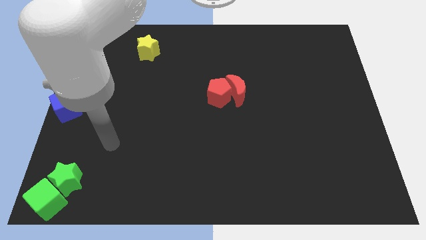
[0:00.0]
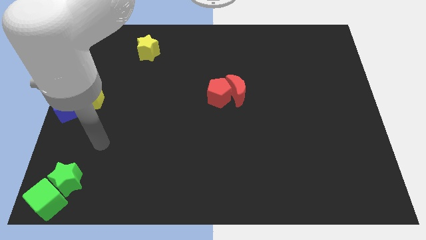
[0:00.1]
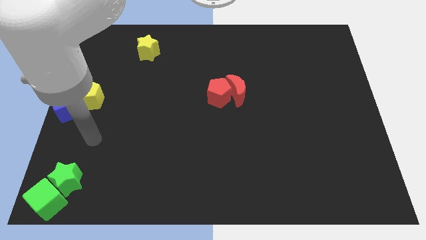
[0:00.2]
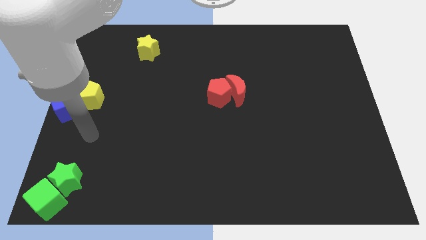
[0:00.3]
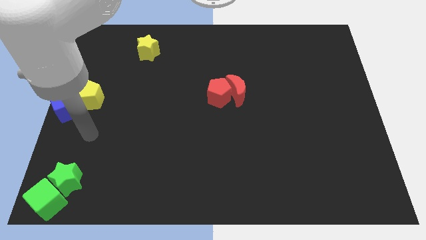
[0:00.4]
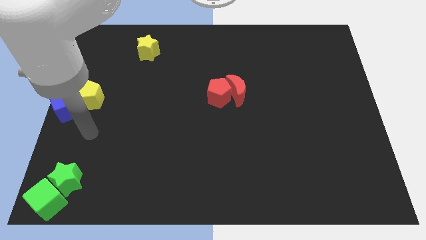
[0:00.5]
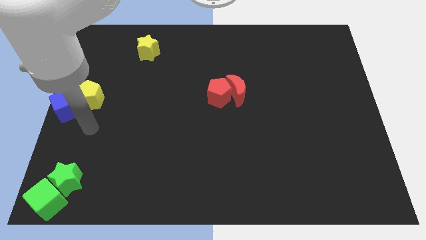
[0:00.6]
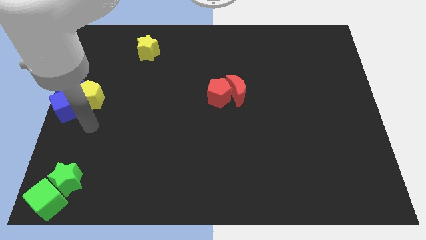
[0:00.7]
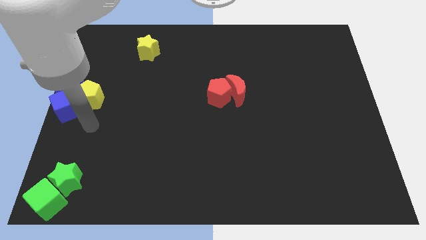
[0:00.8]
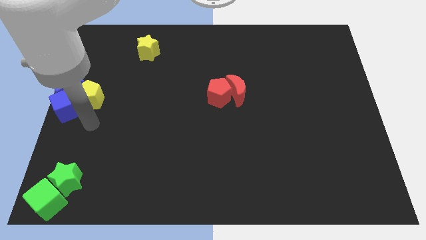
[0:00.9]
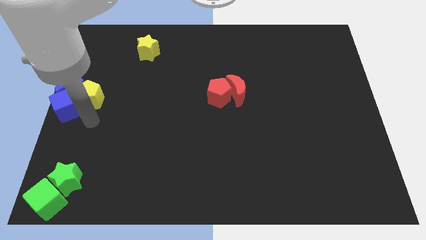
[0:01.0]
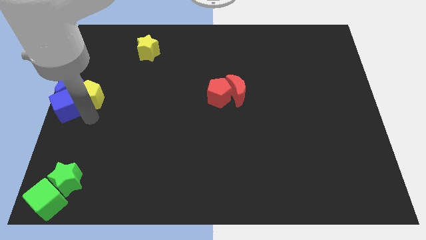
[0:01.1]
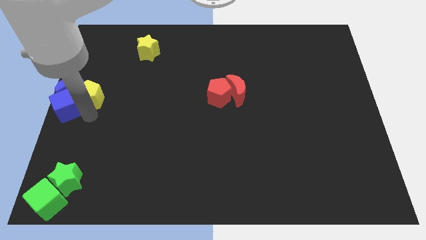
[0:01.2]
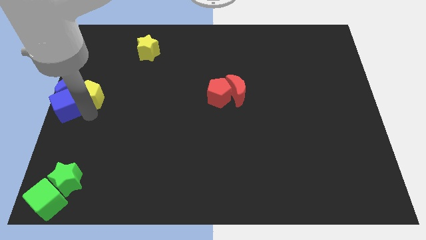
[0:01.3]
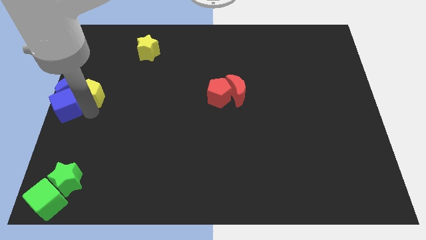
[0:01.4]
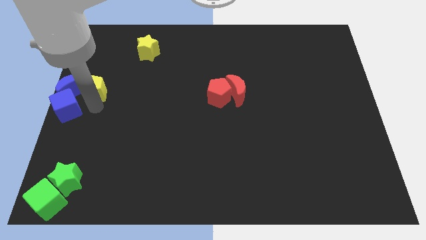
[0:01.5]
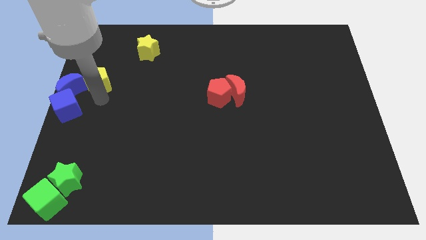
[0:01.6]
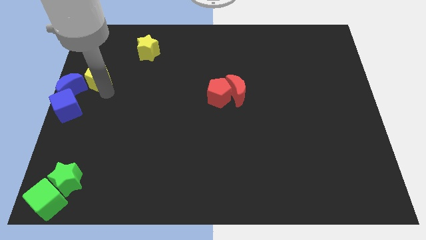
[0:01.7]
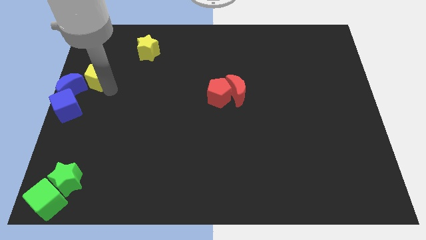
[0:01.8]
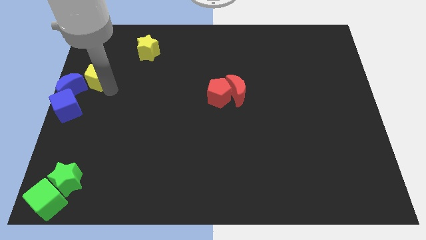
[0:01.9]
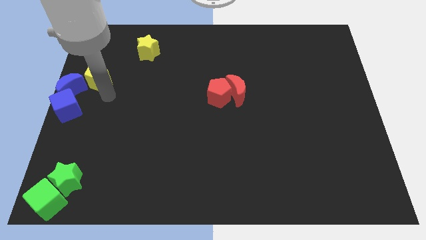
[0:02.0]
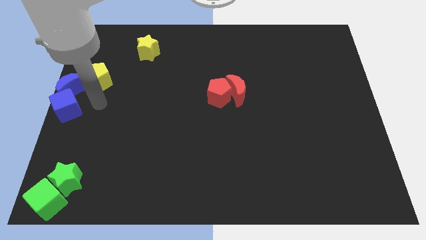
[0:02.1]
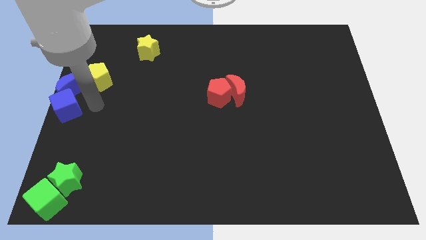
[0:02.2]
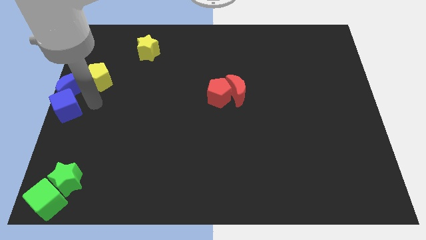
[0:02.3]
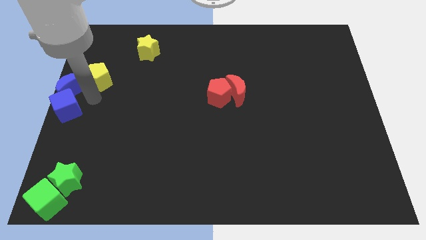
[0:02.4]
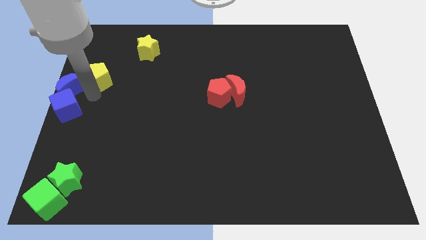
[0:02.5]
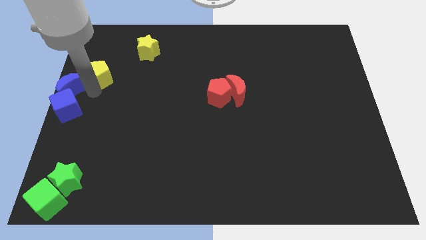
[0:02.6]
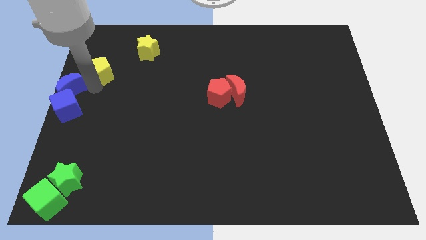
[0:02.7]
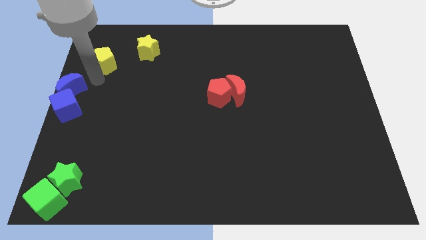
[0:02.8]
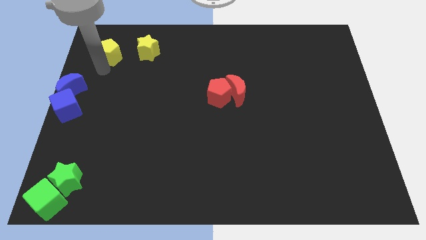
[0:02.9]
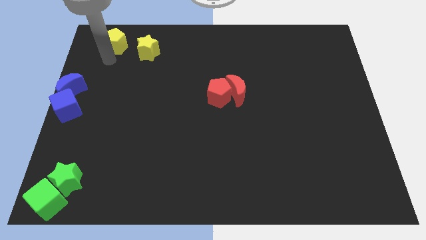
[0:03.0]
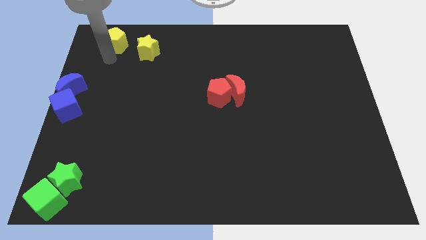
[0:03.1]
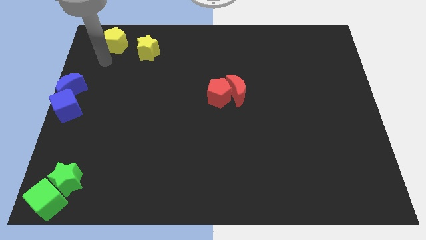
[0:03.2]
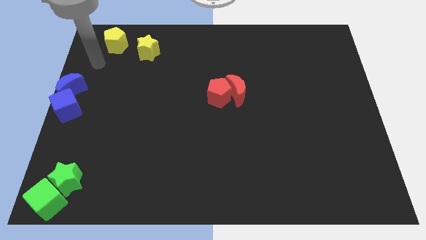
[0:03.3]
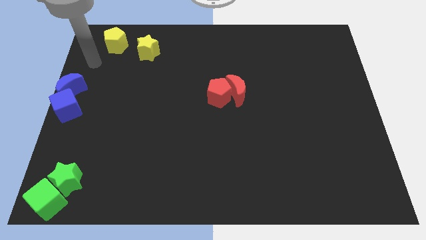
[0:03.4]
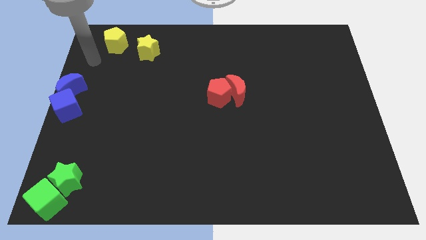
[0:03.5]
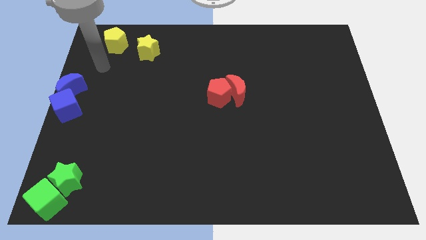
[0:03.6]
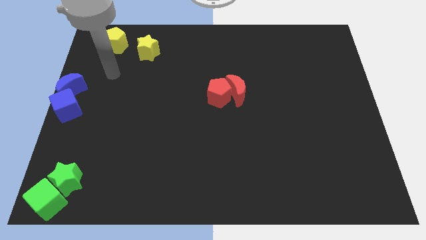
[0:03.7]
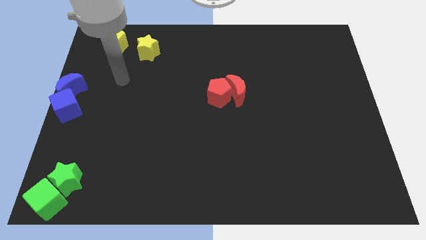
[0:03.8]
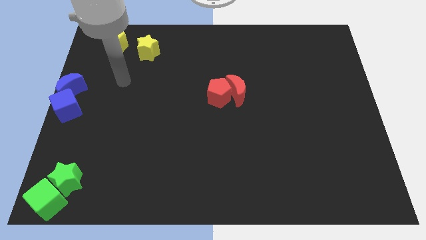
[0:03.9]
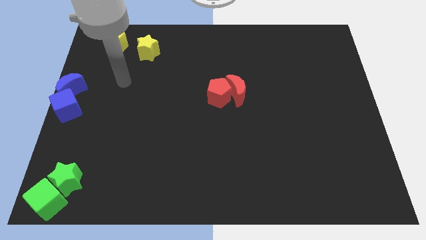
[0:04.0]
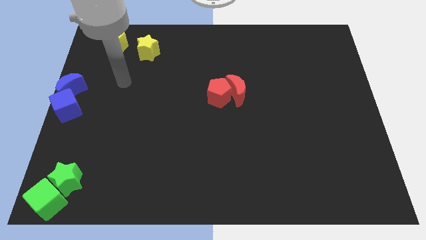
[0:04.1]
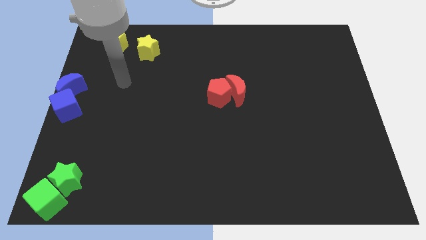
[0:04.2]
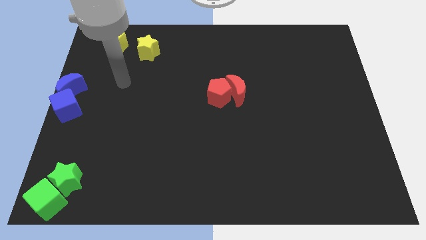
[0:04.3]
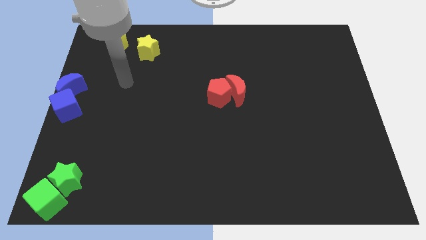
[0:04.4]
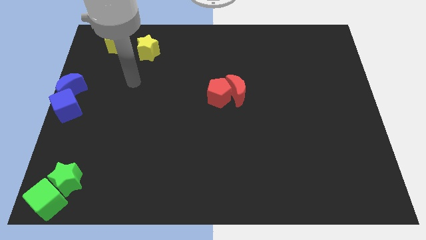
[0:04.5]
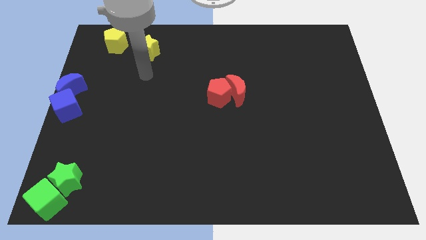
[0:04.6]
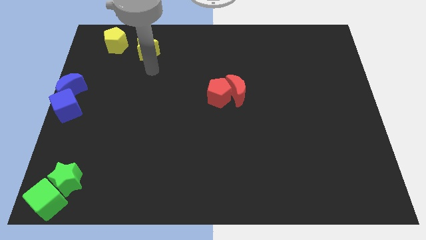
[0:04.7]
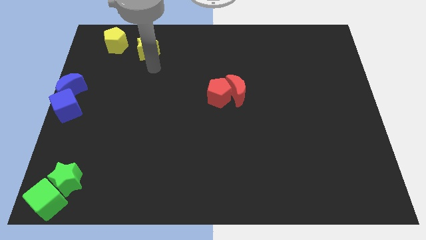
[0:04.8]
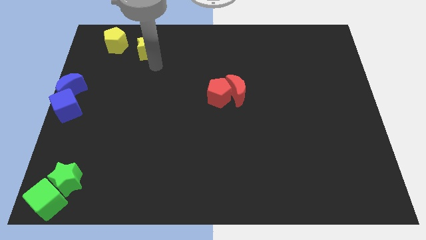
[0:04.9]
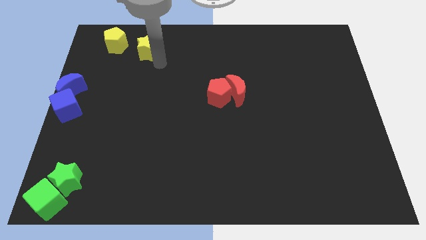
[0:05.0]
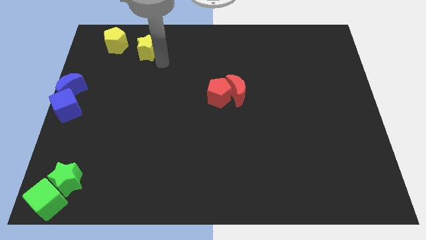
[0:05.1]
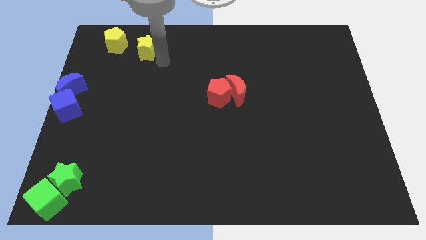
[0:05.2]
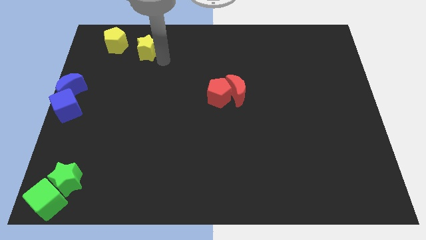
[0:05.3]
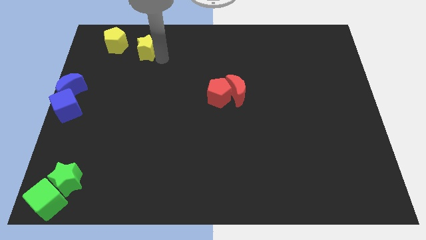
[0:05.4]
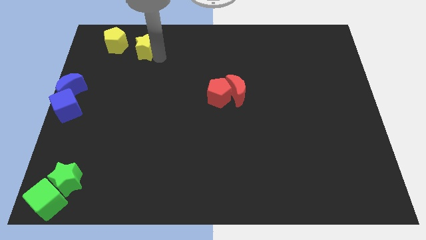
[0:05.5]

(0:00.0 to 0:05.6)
separate the yellow pentagon from the blue blocks

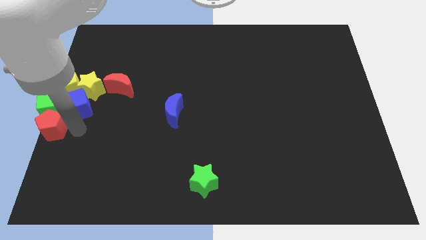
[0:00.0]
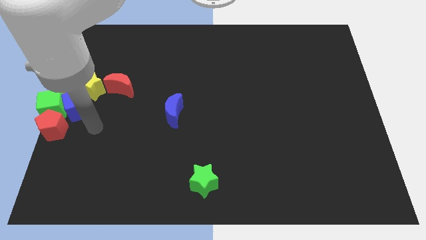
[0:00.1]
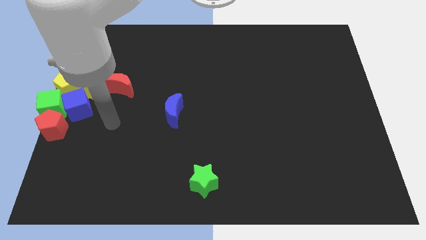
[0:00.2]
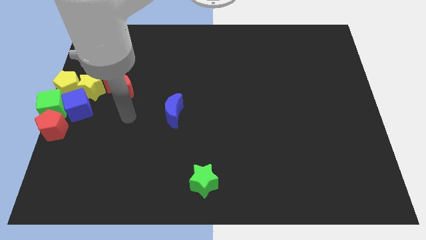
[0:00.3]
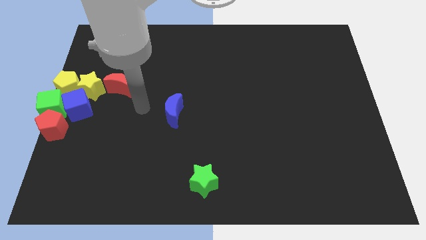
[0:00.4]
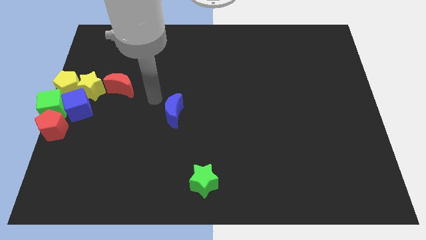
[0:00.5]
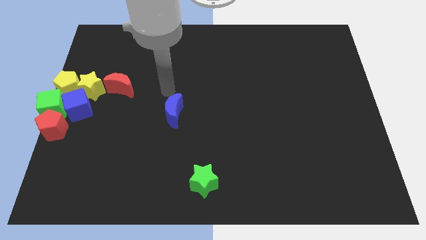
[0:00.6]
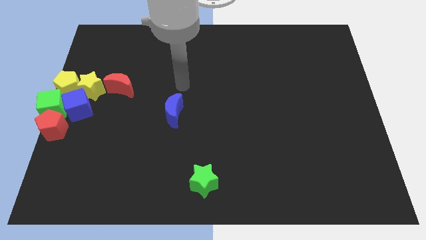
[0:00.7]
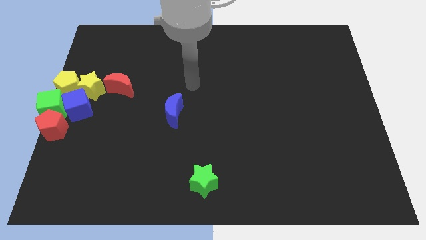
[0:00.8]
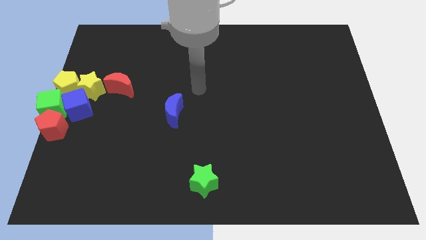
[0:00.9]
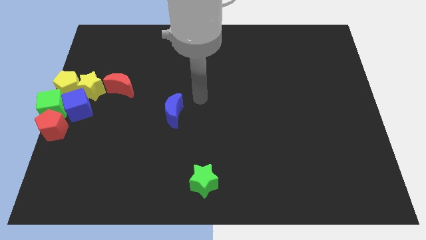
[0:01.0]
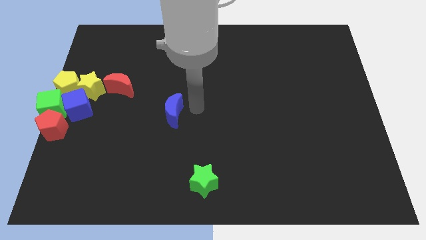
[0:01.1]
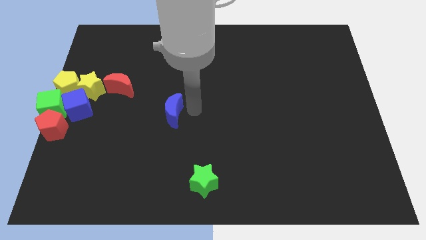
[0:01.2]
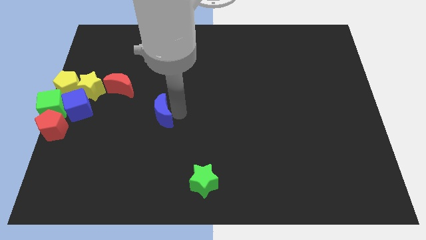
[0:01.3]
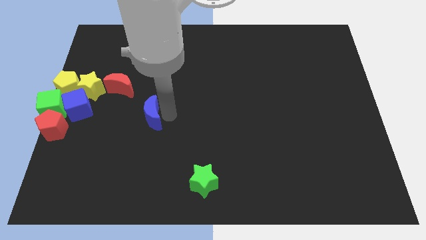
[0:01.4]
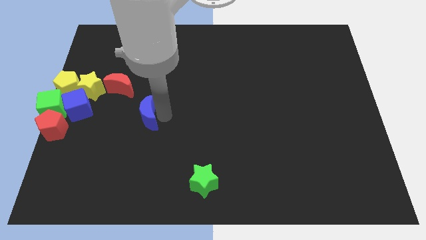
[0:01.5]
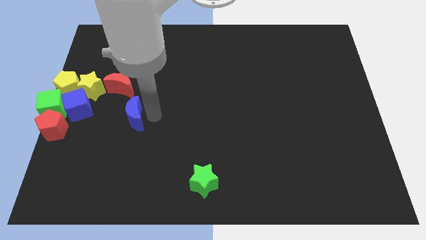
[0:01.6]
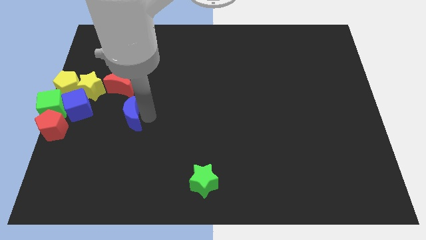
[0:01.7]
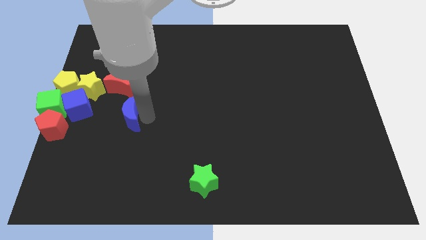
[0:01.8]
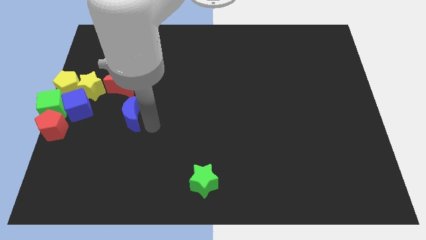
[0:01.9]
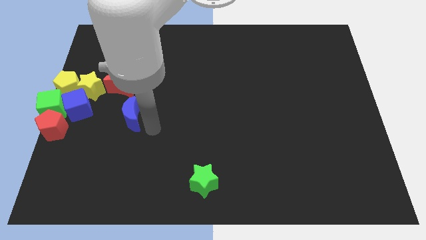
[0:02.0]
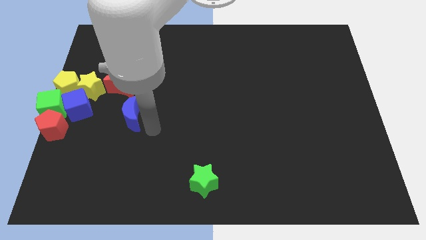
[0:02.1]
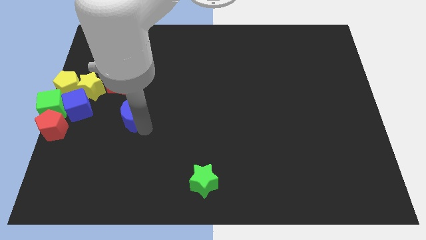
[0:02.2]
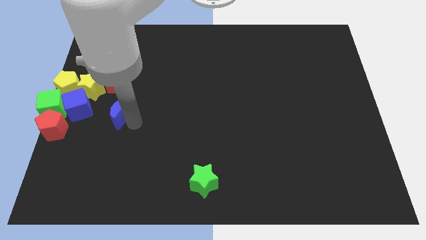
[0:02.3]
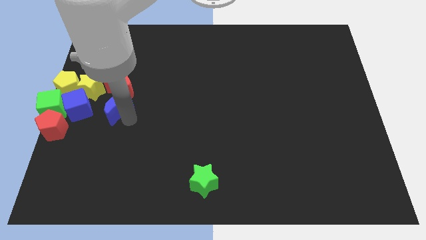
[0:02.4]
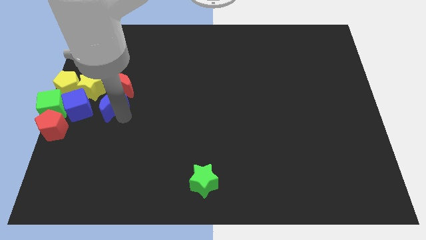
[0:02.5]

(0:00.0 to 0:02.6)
place the blue moon down to the red moon

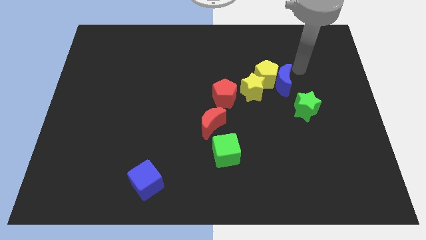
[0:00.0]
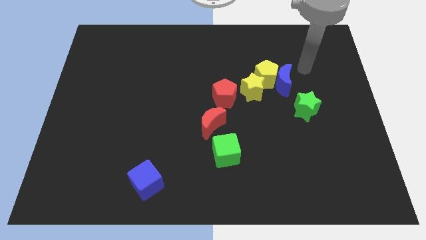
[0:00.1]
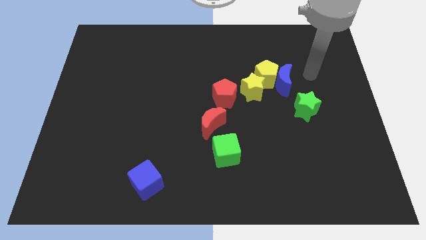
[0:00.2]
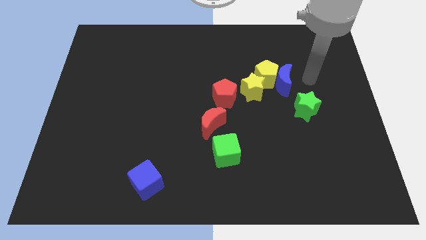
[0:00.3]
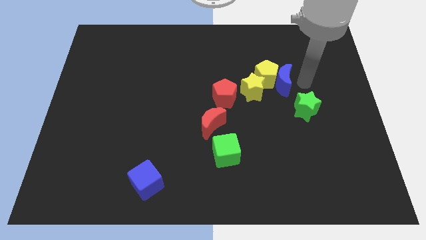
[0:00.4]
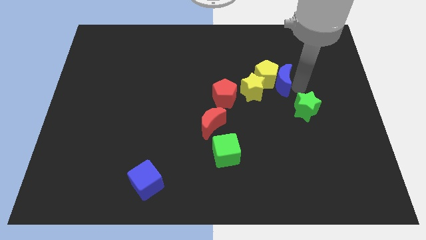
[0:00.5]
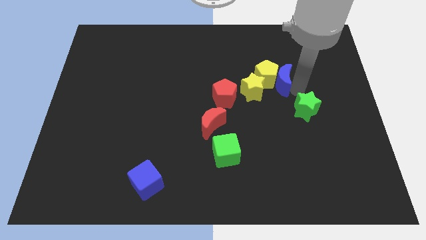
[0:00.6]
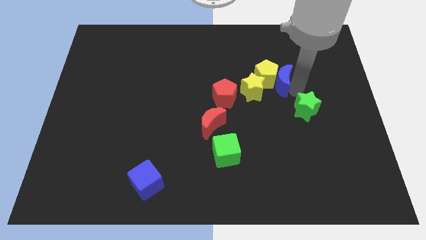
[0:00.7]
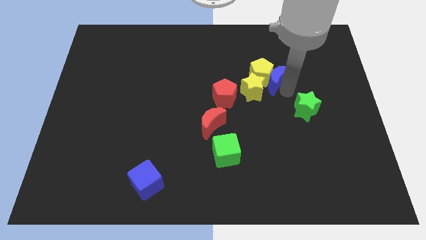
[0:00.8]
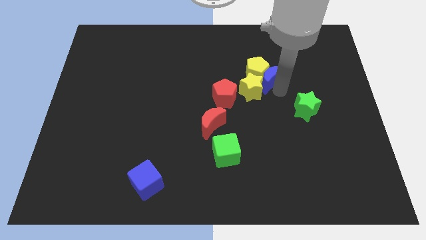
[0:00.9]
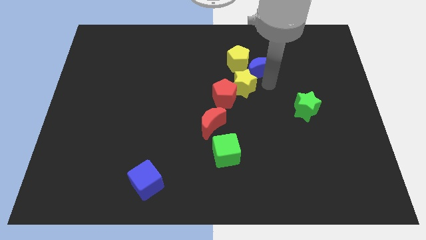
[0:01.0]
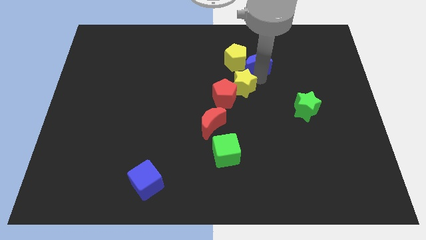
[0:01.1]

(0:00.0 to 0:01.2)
push blue moon in to yellow pentagon
